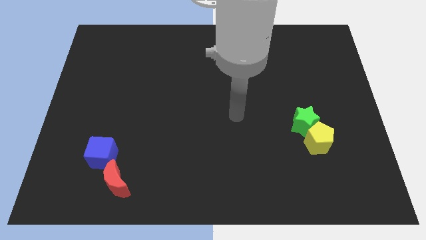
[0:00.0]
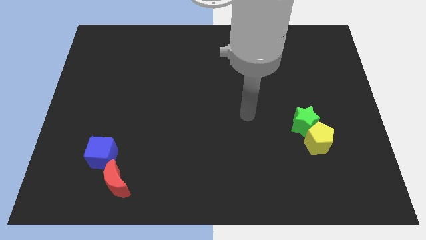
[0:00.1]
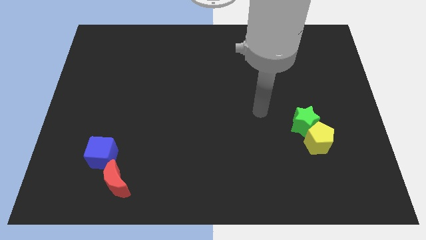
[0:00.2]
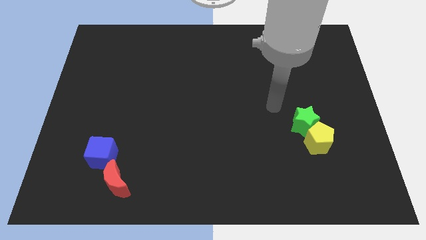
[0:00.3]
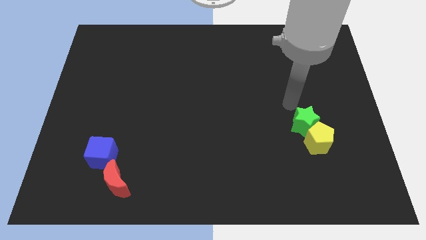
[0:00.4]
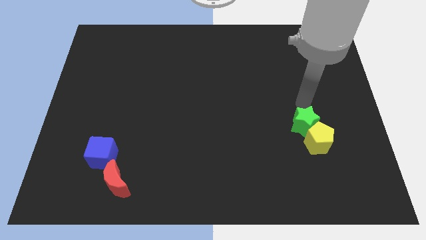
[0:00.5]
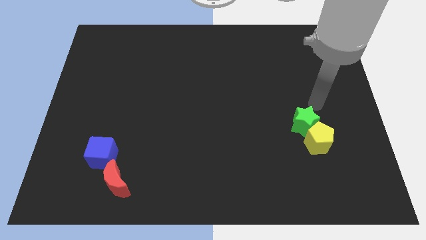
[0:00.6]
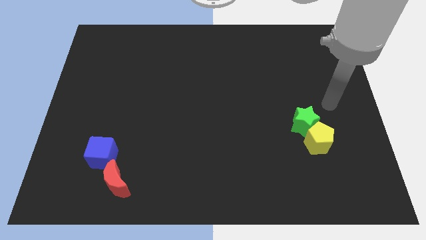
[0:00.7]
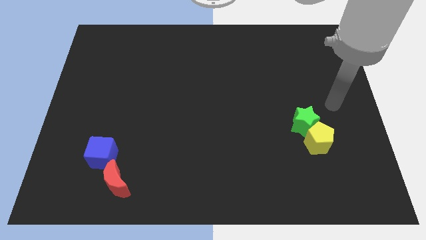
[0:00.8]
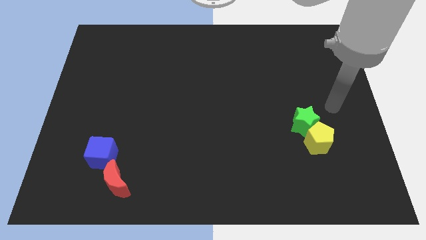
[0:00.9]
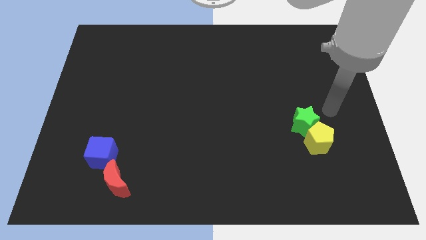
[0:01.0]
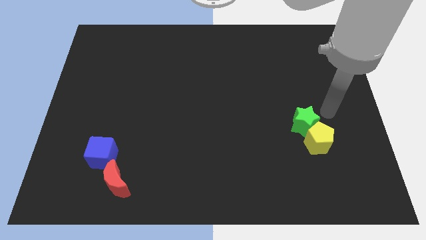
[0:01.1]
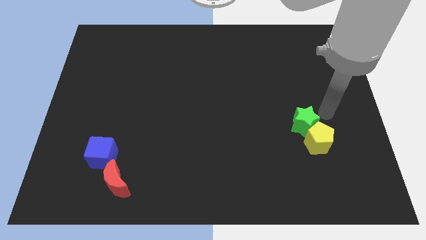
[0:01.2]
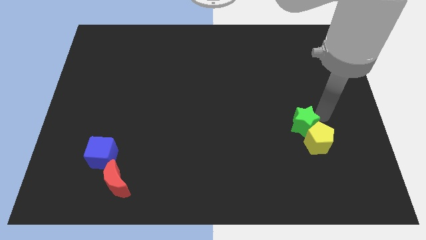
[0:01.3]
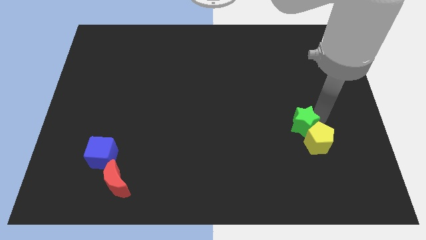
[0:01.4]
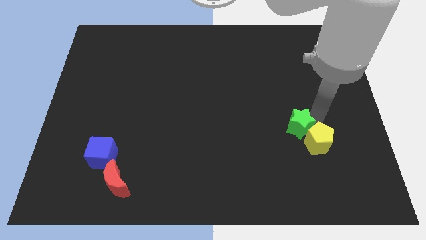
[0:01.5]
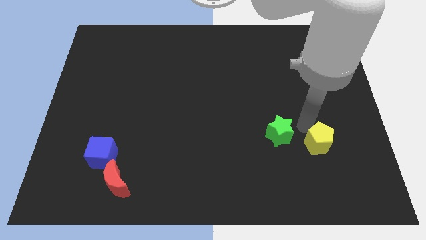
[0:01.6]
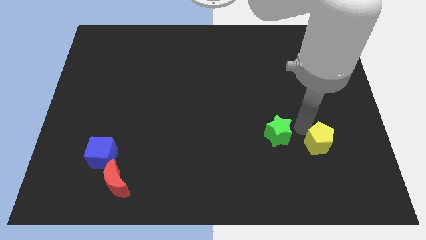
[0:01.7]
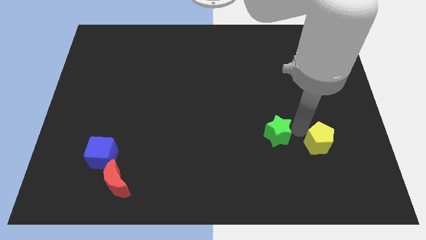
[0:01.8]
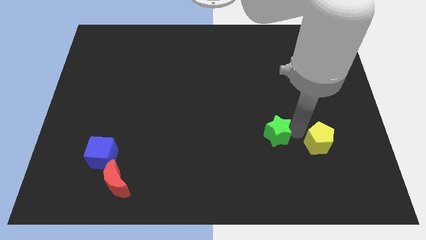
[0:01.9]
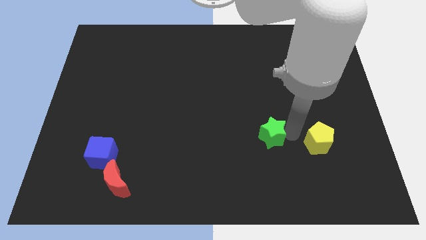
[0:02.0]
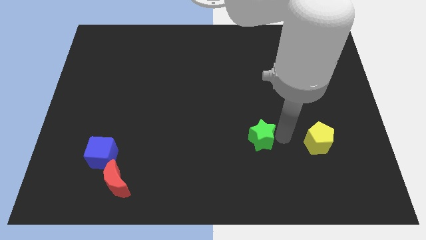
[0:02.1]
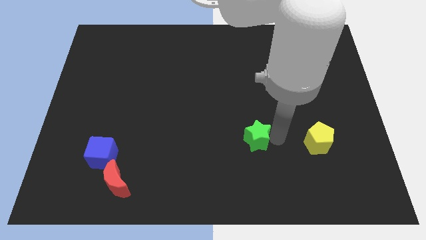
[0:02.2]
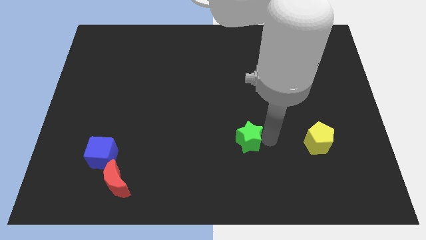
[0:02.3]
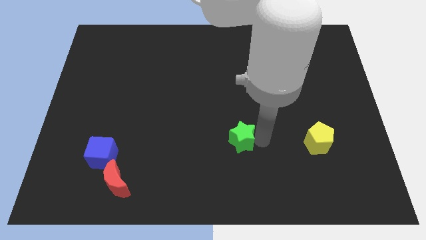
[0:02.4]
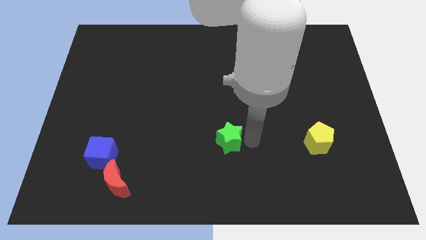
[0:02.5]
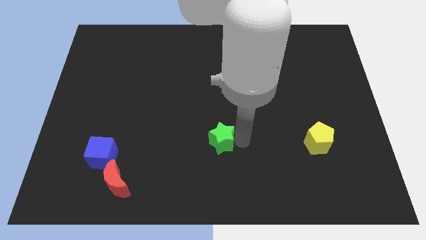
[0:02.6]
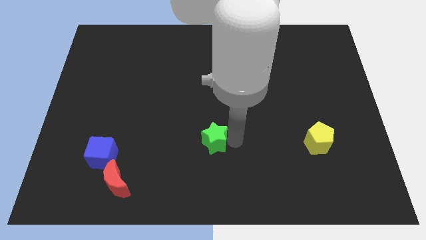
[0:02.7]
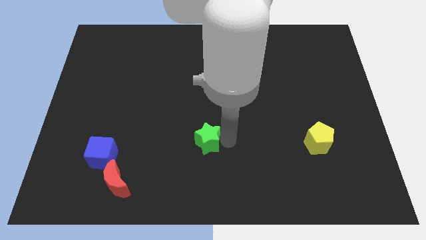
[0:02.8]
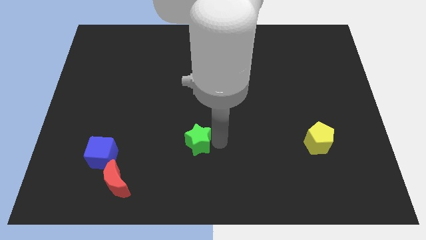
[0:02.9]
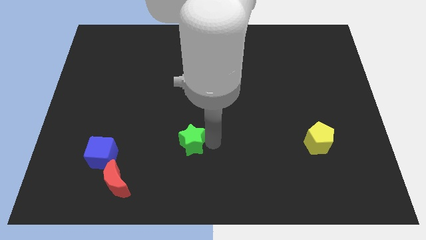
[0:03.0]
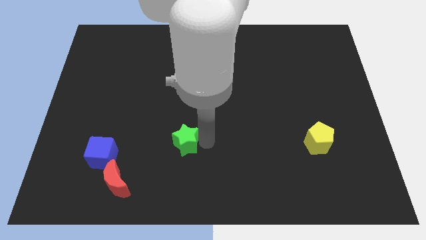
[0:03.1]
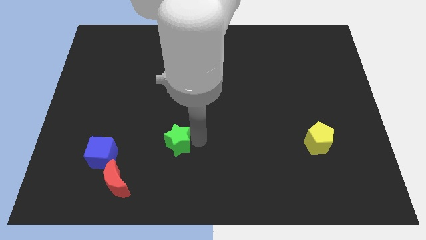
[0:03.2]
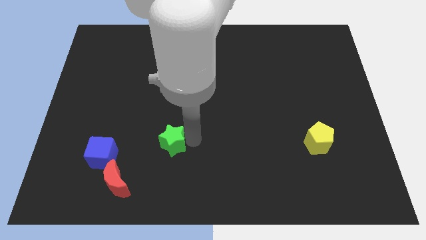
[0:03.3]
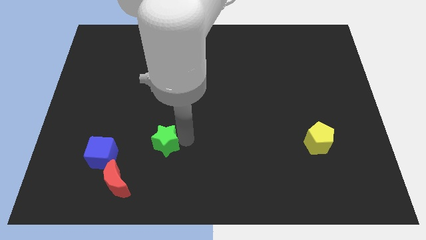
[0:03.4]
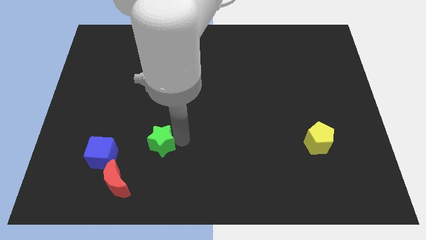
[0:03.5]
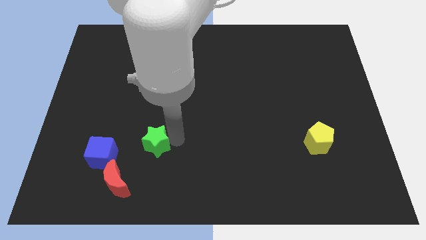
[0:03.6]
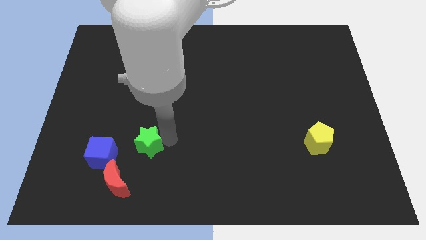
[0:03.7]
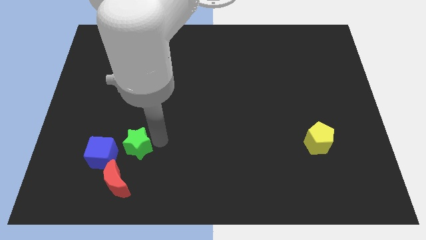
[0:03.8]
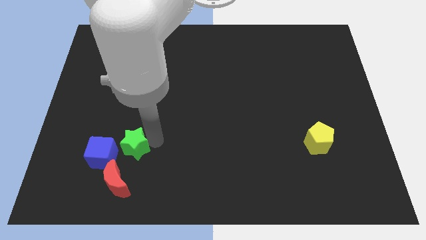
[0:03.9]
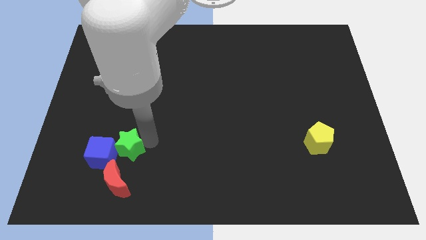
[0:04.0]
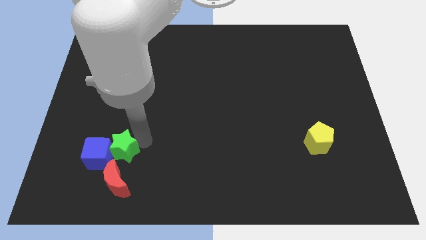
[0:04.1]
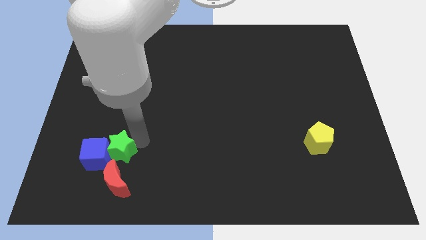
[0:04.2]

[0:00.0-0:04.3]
put the star close to the cube

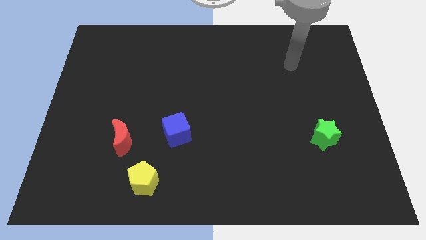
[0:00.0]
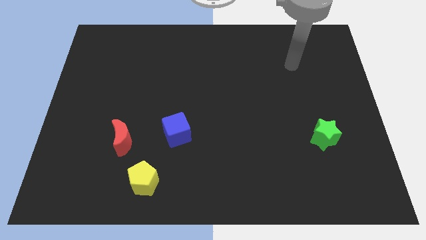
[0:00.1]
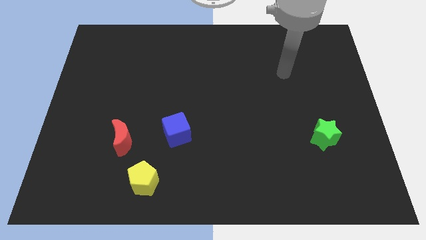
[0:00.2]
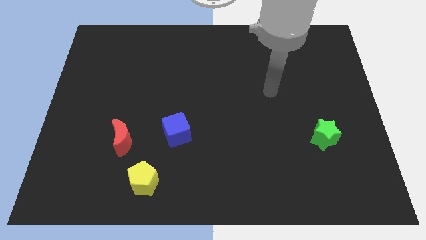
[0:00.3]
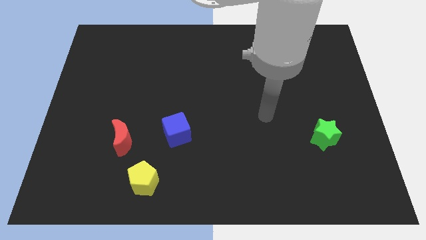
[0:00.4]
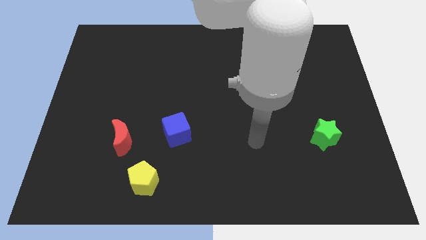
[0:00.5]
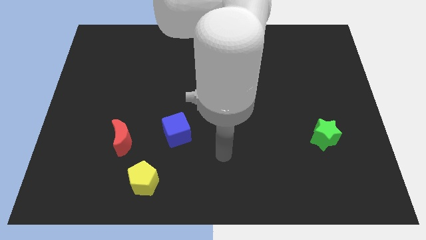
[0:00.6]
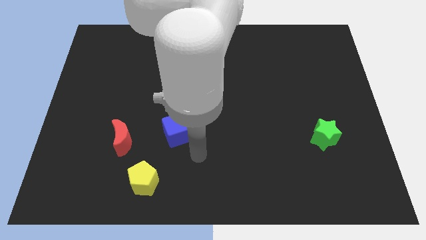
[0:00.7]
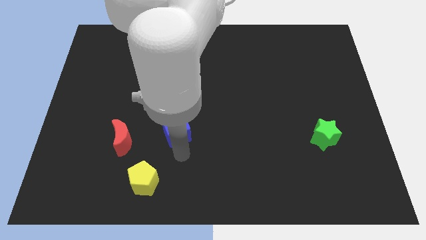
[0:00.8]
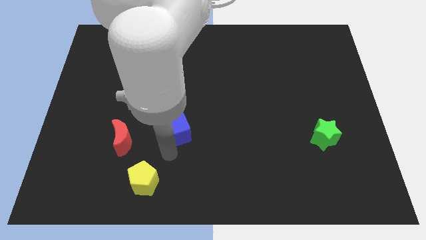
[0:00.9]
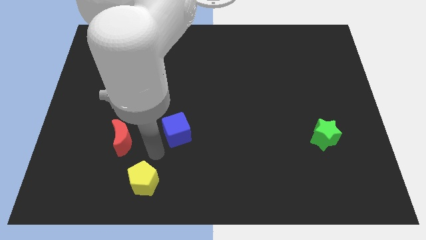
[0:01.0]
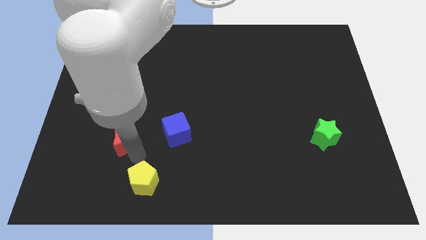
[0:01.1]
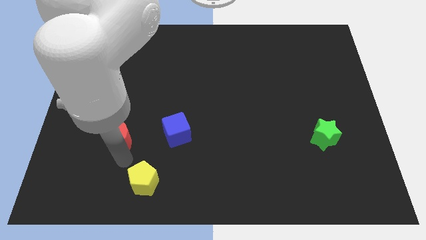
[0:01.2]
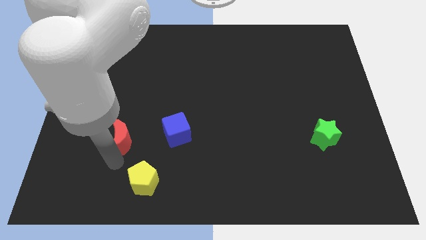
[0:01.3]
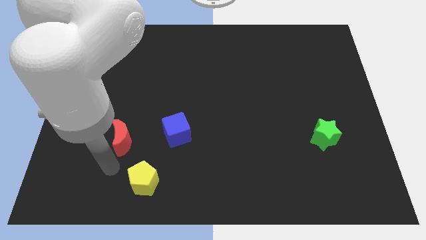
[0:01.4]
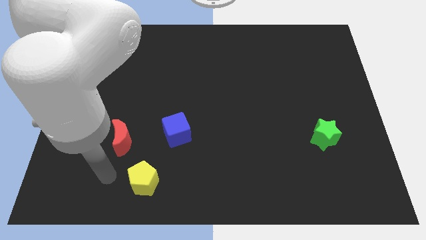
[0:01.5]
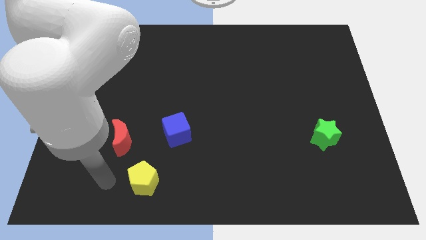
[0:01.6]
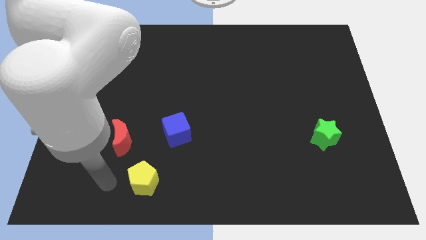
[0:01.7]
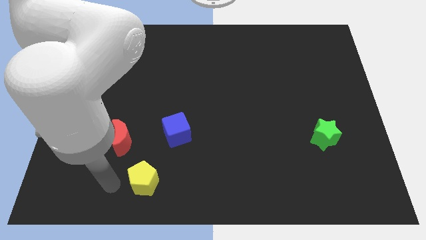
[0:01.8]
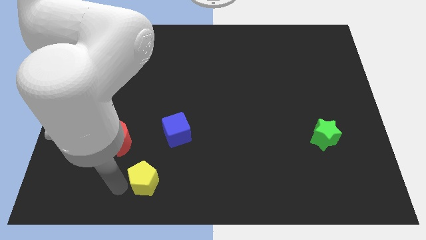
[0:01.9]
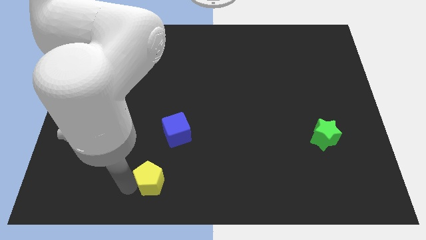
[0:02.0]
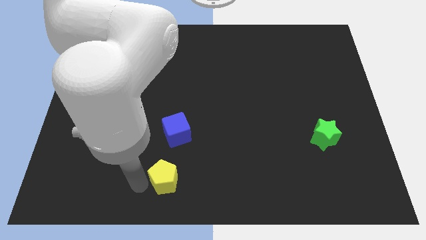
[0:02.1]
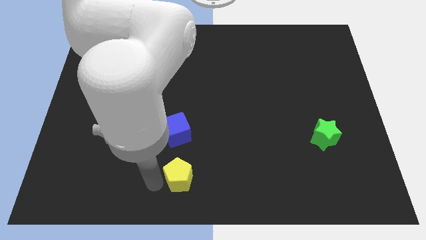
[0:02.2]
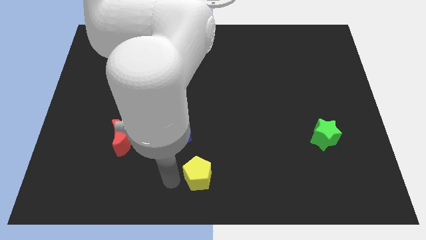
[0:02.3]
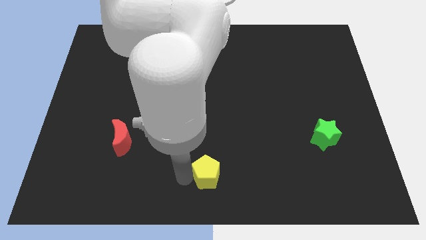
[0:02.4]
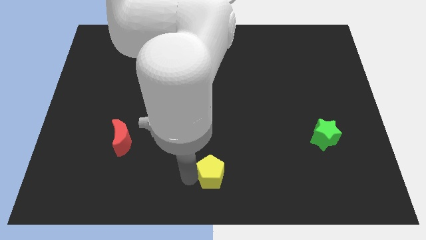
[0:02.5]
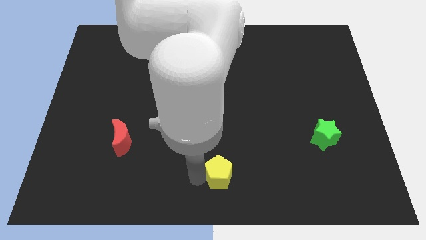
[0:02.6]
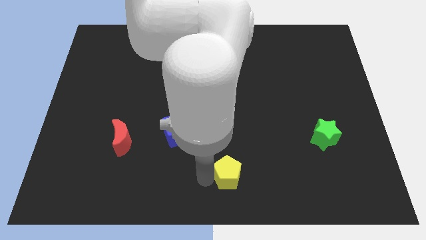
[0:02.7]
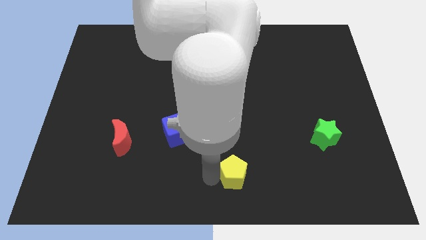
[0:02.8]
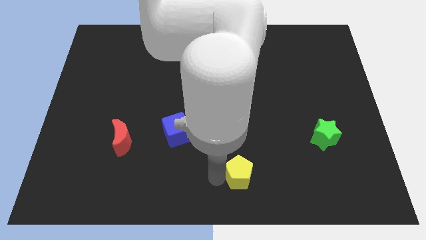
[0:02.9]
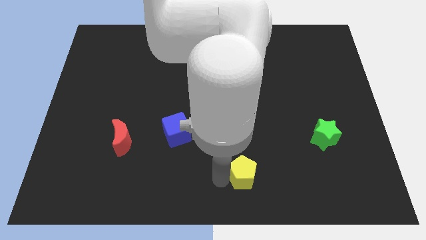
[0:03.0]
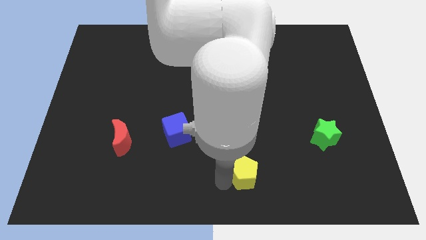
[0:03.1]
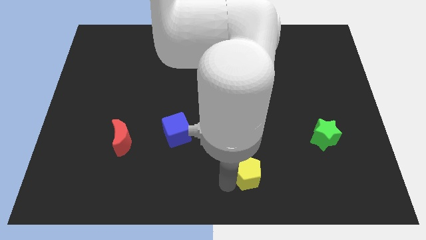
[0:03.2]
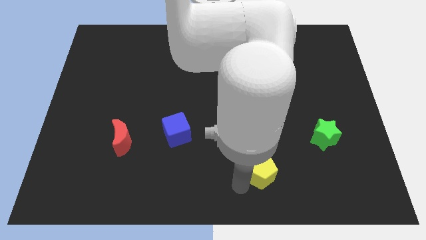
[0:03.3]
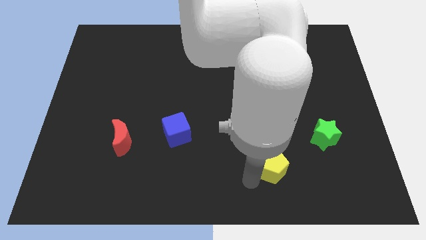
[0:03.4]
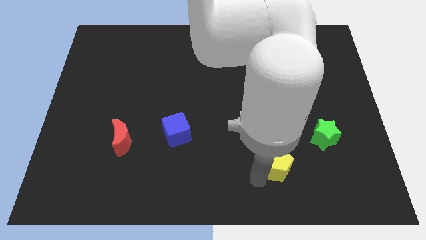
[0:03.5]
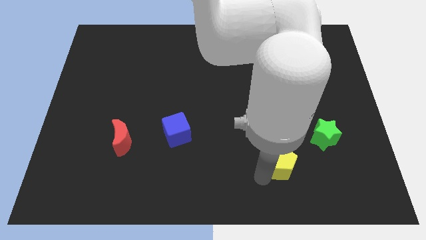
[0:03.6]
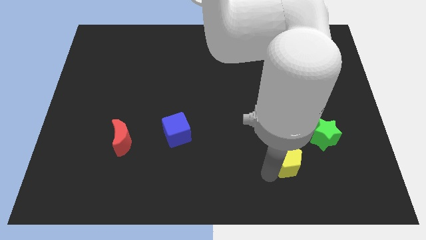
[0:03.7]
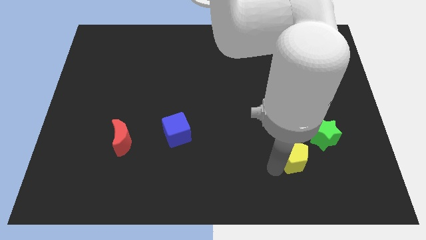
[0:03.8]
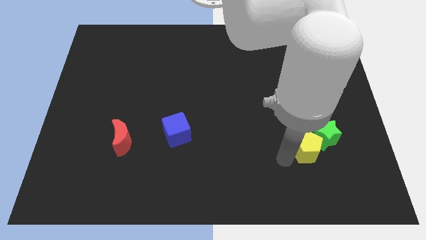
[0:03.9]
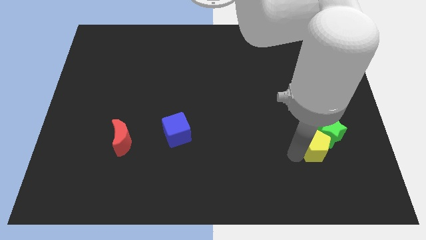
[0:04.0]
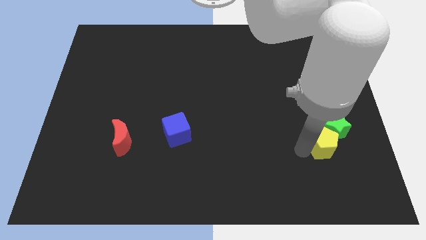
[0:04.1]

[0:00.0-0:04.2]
put the yellow block towards the green star

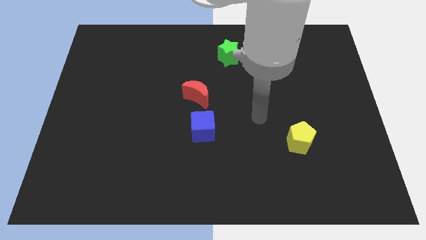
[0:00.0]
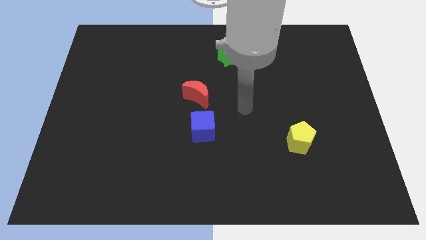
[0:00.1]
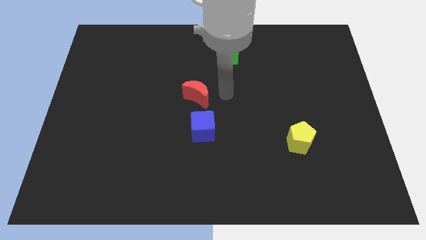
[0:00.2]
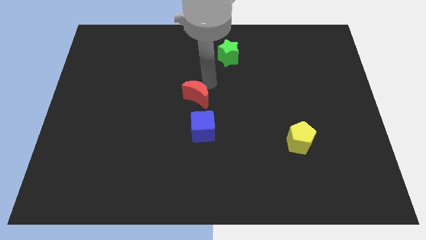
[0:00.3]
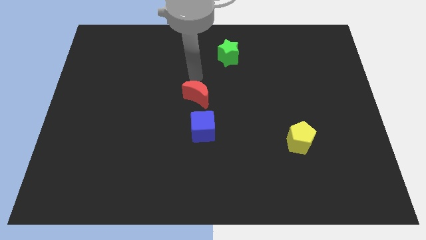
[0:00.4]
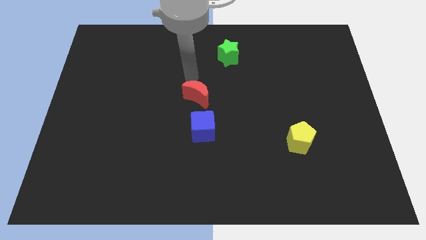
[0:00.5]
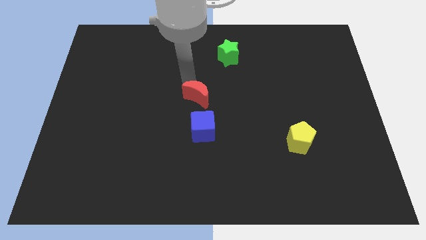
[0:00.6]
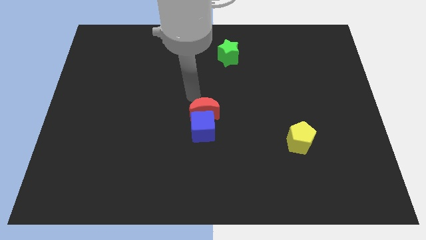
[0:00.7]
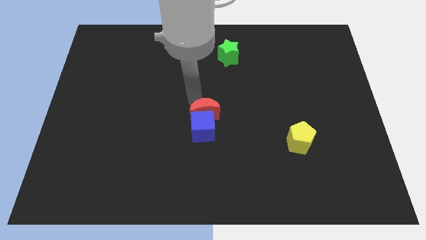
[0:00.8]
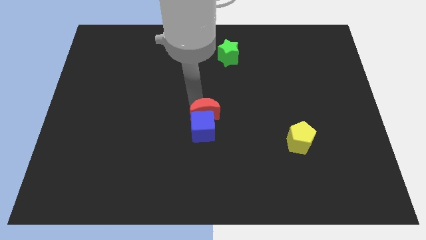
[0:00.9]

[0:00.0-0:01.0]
move the moon to the blue cube
